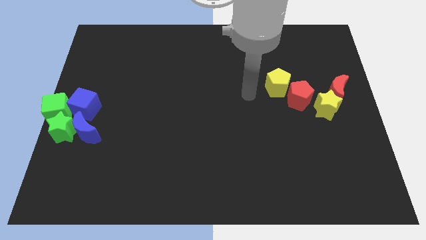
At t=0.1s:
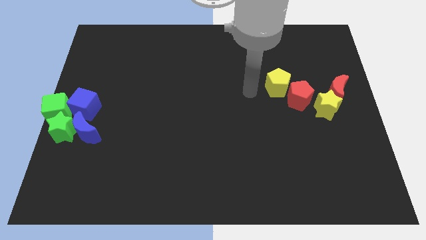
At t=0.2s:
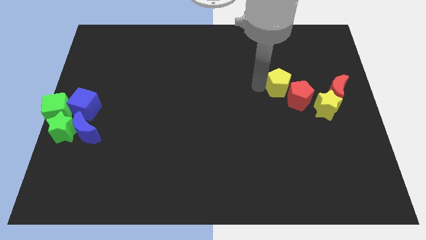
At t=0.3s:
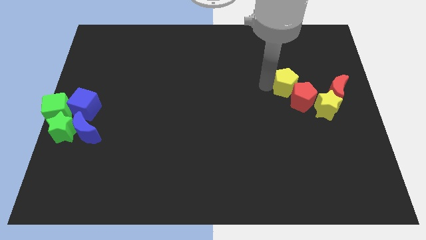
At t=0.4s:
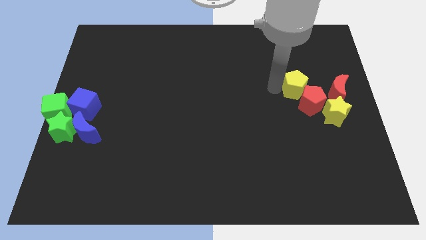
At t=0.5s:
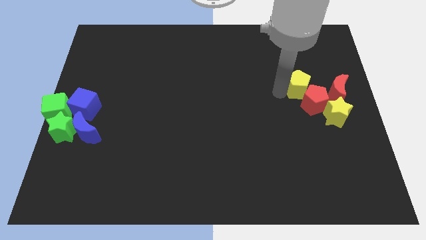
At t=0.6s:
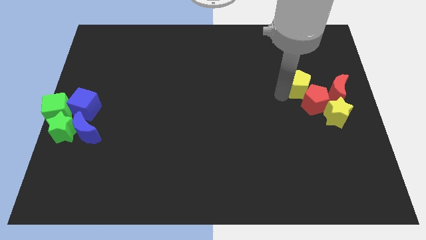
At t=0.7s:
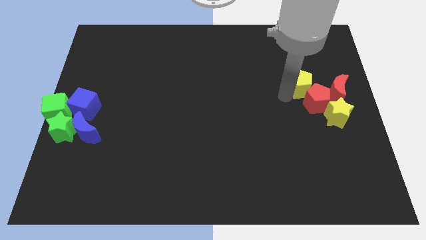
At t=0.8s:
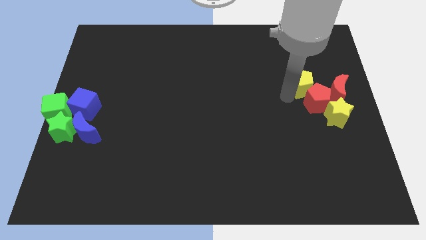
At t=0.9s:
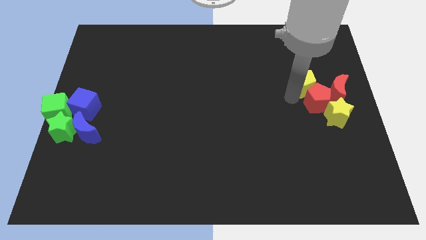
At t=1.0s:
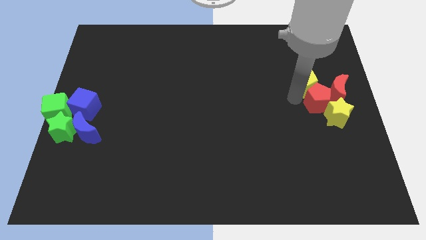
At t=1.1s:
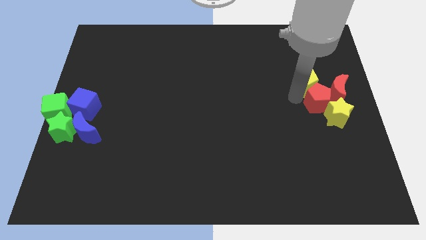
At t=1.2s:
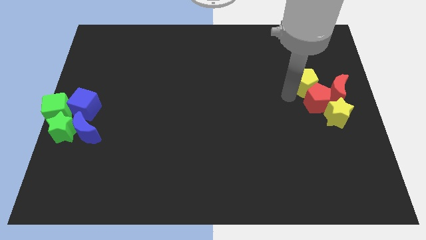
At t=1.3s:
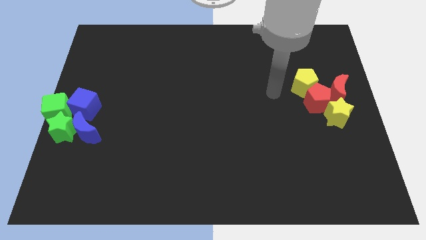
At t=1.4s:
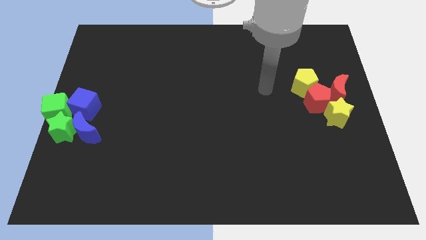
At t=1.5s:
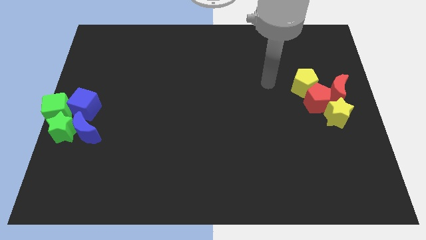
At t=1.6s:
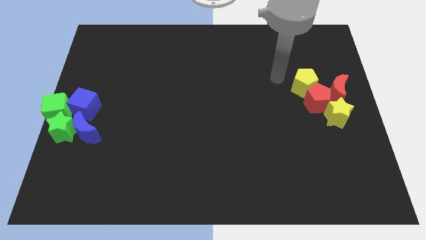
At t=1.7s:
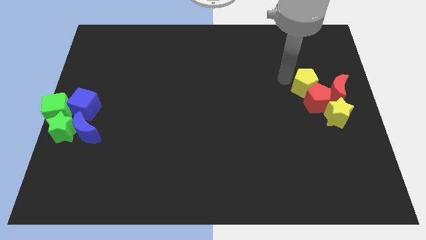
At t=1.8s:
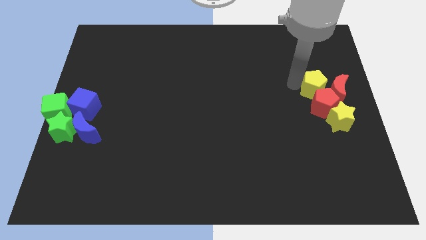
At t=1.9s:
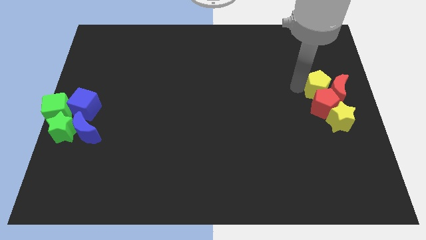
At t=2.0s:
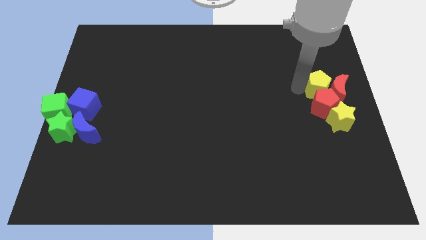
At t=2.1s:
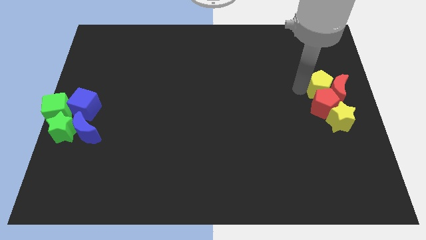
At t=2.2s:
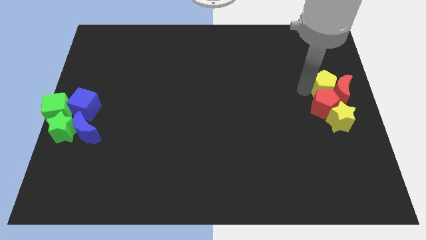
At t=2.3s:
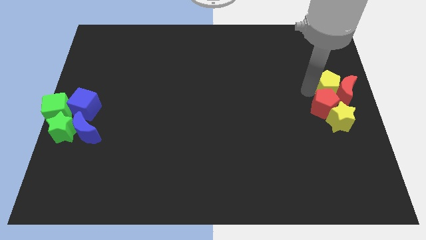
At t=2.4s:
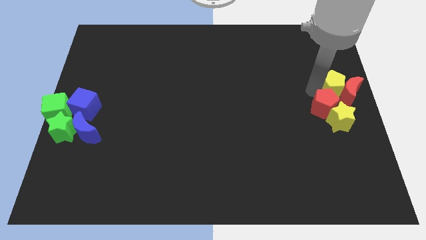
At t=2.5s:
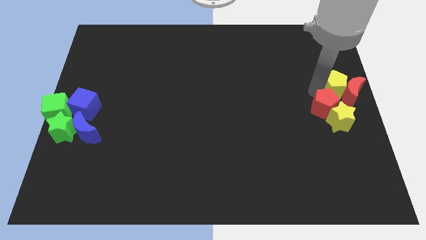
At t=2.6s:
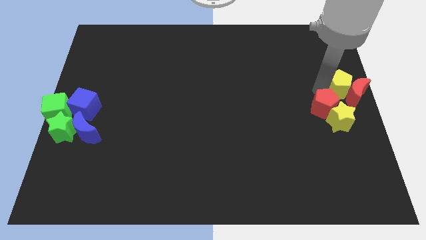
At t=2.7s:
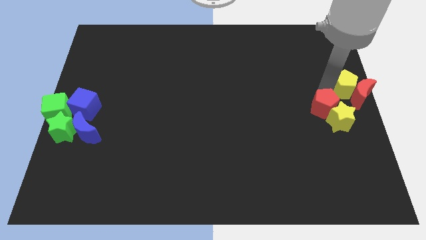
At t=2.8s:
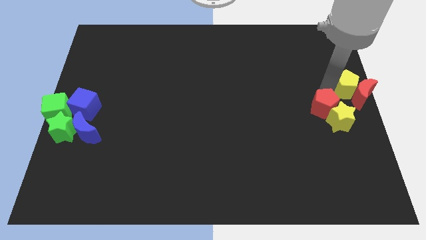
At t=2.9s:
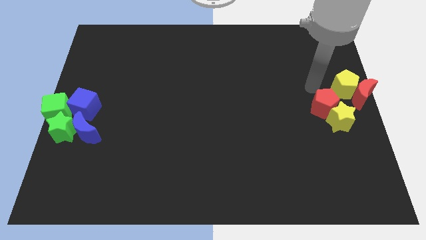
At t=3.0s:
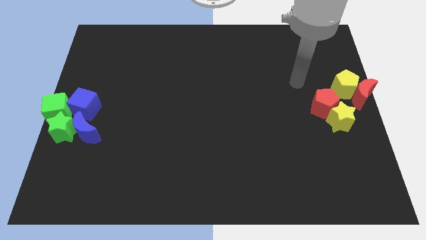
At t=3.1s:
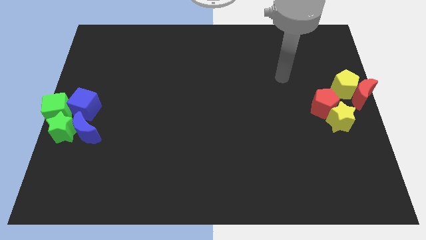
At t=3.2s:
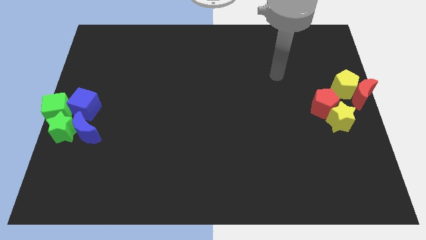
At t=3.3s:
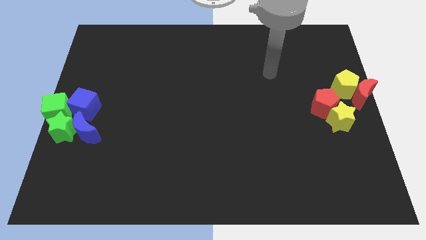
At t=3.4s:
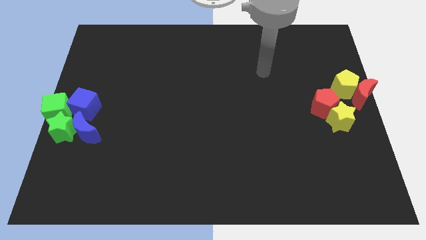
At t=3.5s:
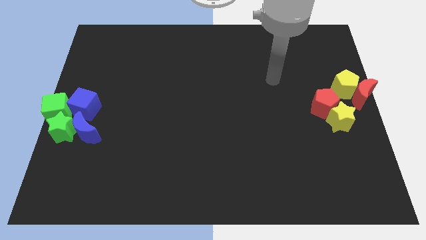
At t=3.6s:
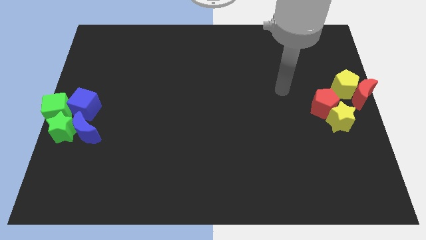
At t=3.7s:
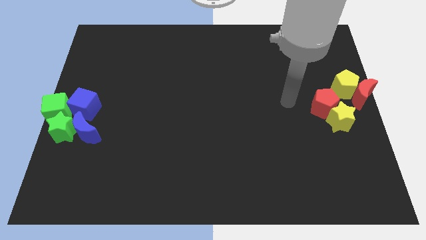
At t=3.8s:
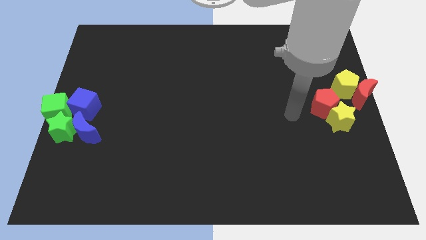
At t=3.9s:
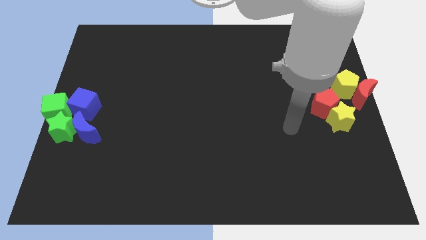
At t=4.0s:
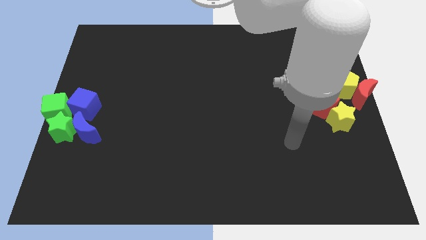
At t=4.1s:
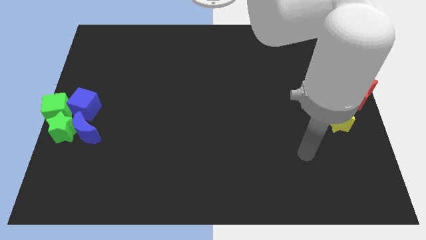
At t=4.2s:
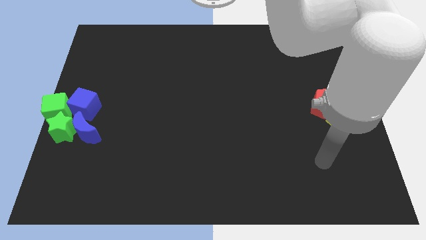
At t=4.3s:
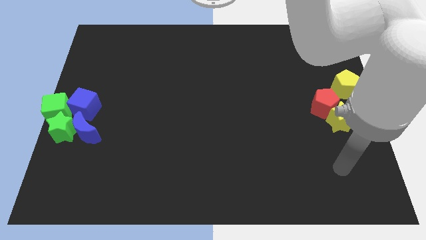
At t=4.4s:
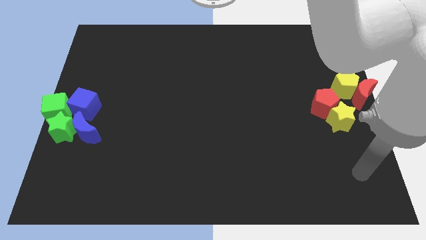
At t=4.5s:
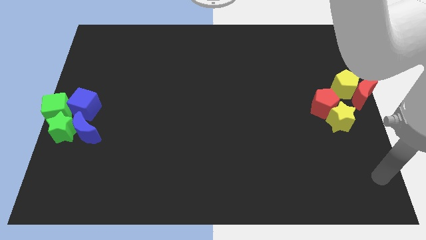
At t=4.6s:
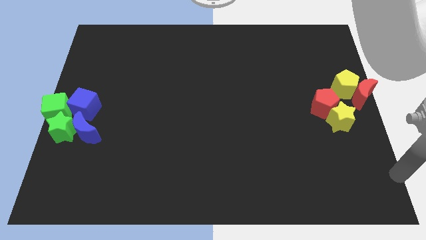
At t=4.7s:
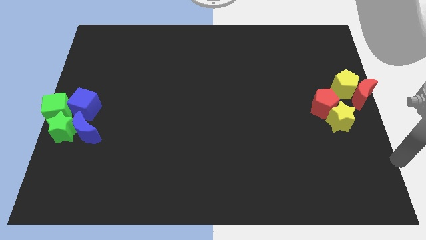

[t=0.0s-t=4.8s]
push the red moon to the center right with yellow pentagon

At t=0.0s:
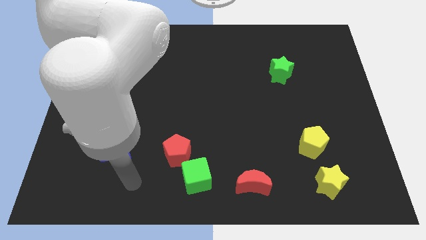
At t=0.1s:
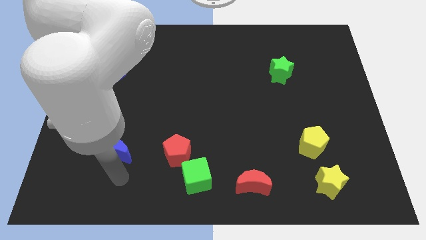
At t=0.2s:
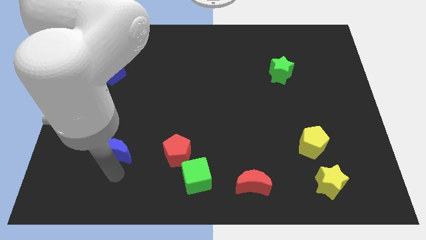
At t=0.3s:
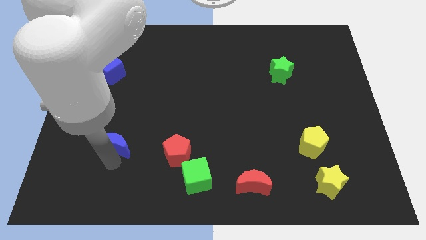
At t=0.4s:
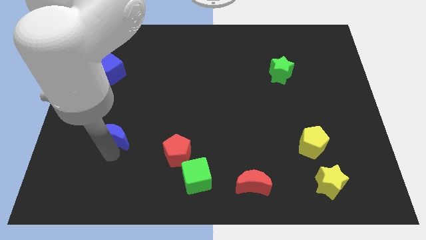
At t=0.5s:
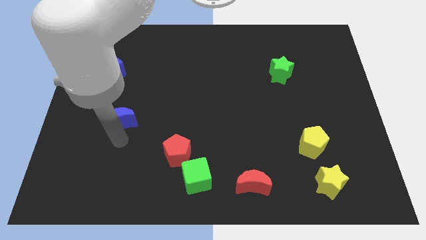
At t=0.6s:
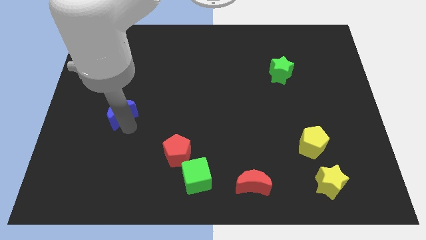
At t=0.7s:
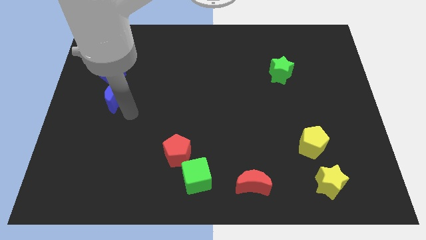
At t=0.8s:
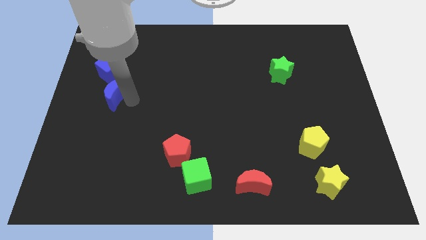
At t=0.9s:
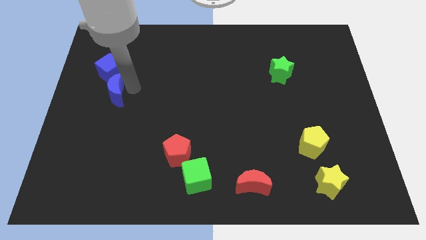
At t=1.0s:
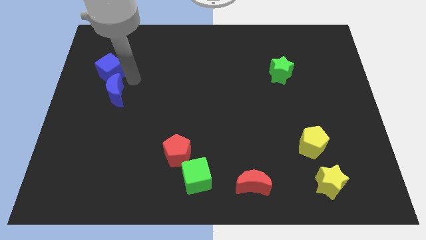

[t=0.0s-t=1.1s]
push the blue crescent towards the blue block

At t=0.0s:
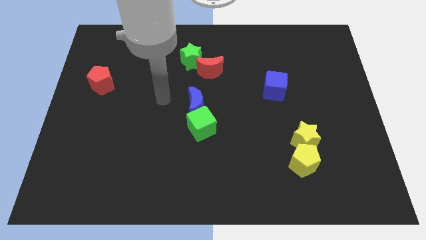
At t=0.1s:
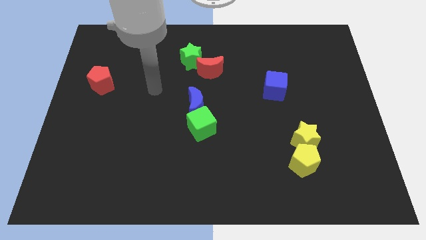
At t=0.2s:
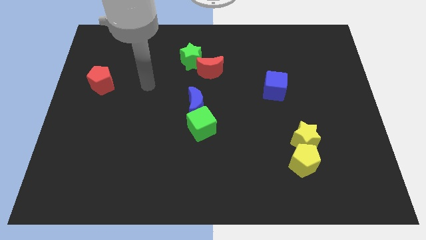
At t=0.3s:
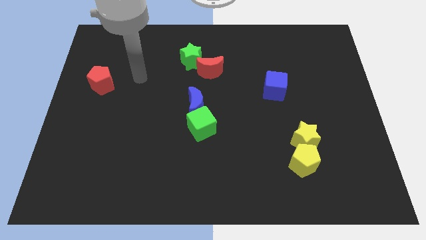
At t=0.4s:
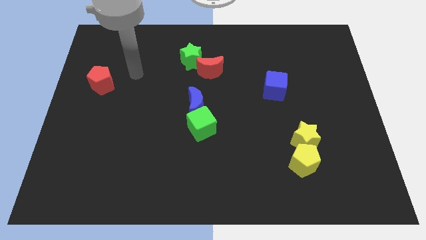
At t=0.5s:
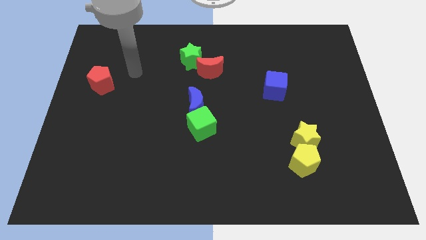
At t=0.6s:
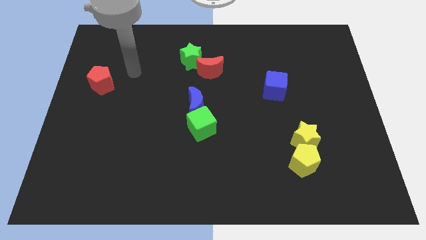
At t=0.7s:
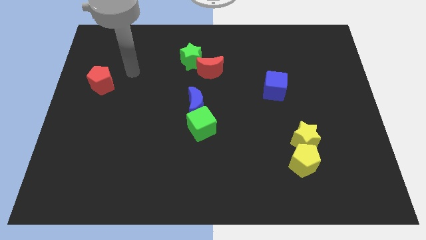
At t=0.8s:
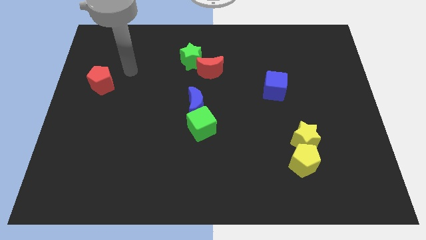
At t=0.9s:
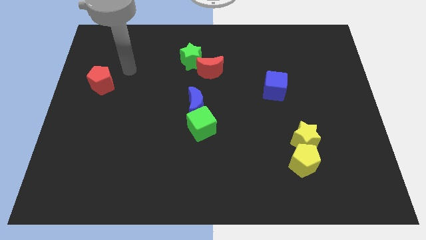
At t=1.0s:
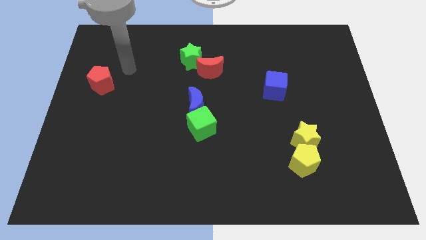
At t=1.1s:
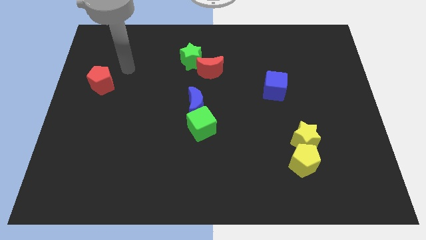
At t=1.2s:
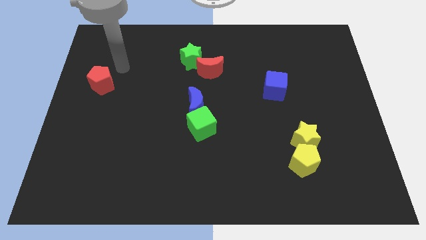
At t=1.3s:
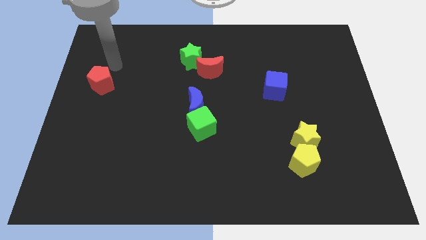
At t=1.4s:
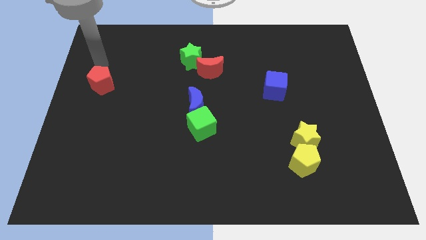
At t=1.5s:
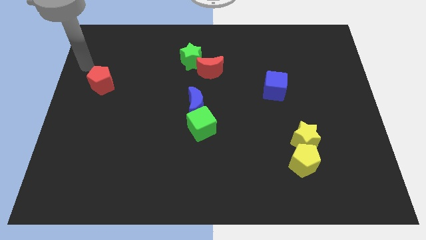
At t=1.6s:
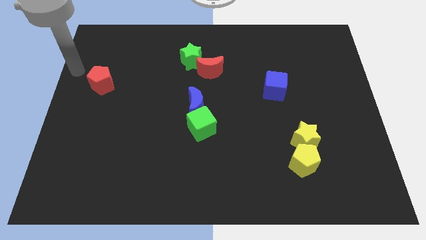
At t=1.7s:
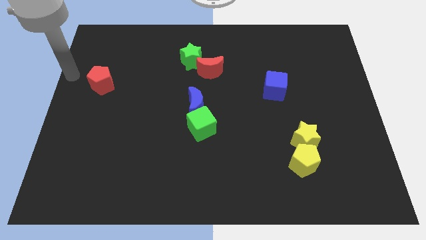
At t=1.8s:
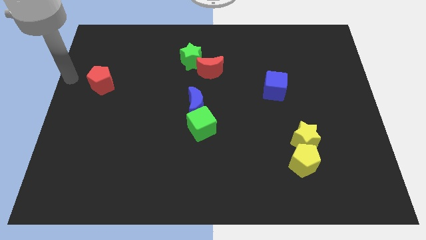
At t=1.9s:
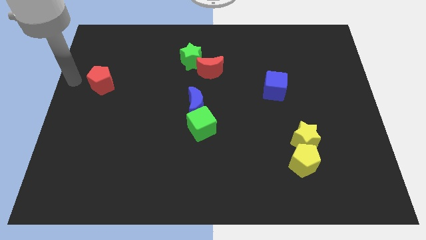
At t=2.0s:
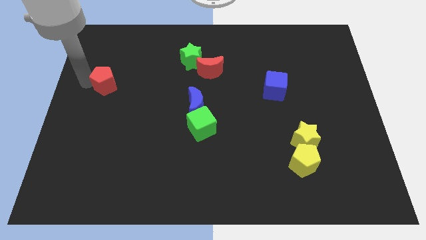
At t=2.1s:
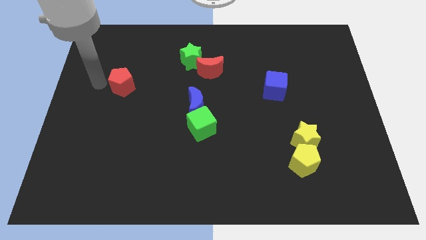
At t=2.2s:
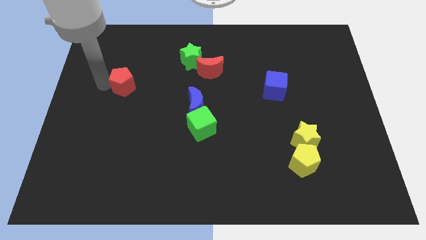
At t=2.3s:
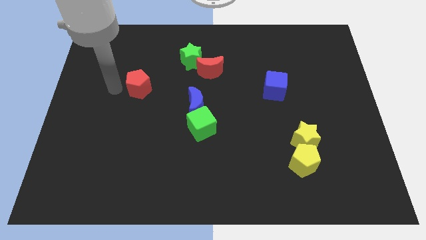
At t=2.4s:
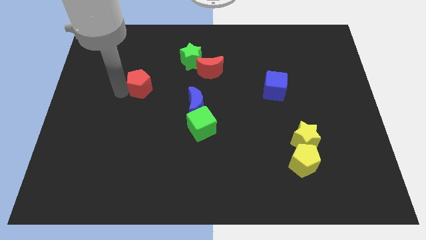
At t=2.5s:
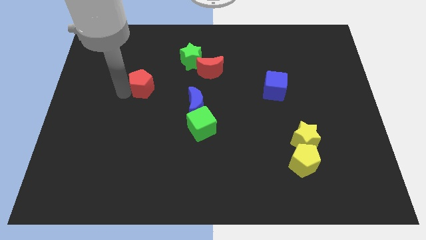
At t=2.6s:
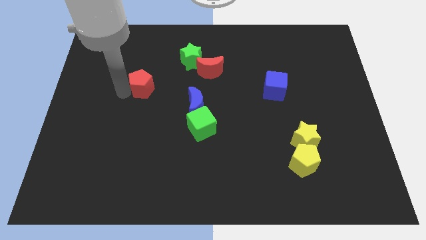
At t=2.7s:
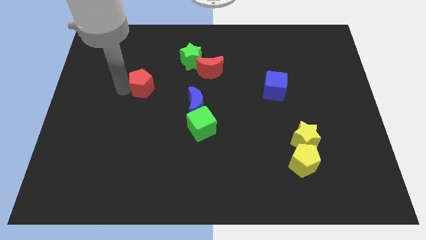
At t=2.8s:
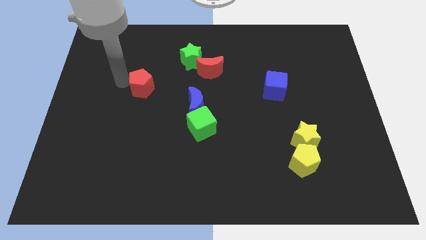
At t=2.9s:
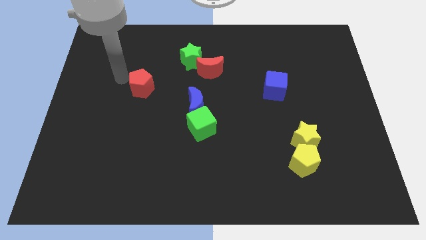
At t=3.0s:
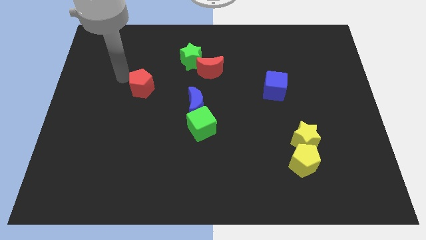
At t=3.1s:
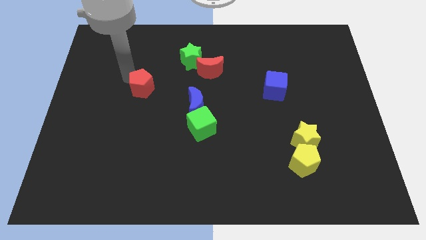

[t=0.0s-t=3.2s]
move the red pentagon slightly to the right of the board

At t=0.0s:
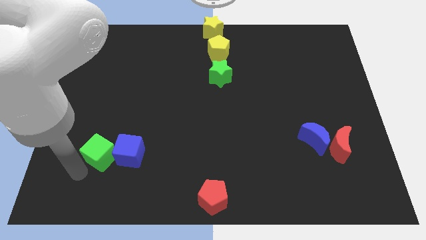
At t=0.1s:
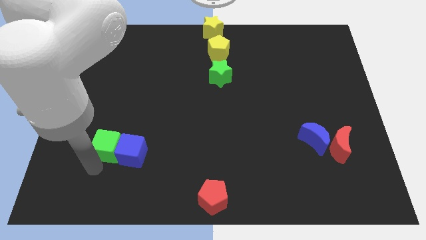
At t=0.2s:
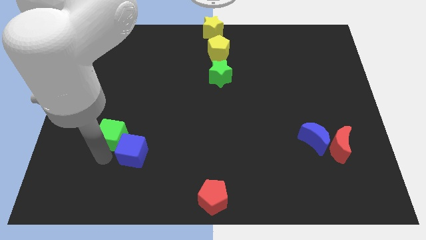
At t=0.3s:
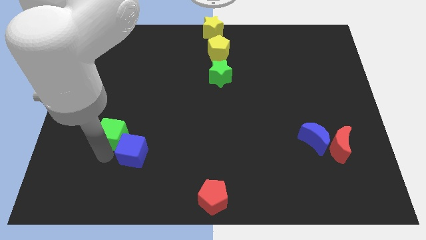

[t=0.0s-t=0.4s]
move the green cube slightly upwards to the blue cube
